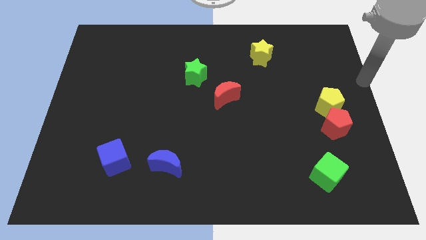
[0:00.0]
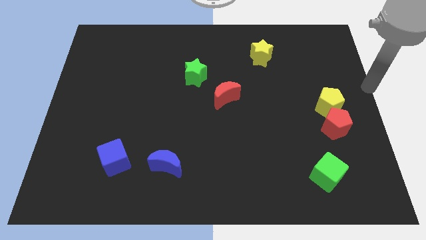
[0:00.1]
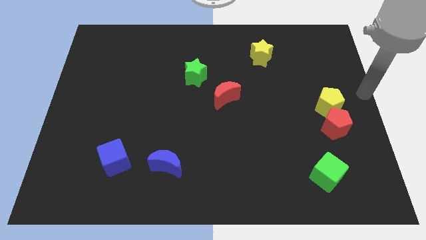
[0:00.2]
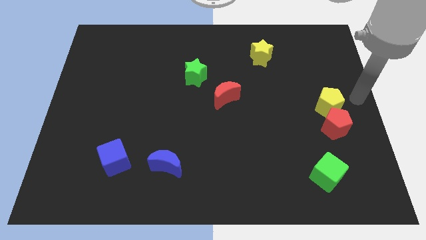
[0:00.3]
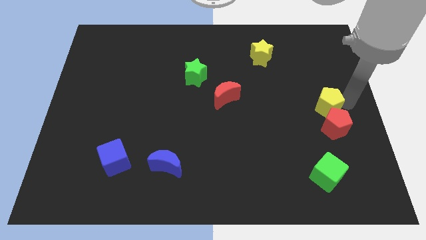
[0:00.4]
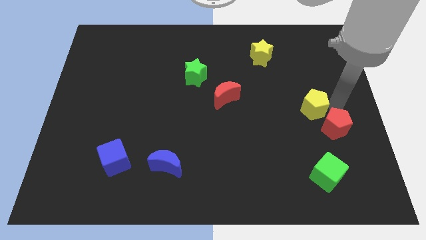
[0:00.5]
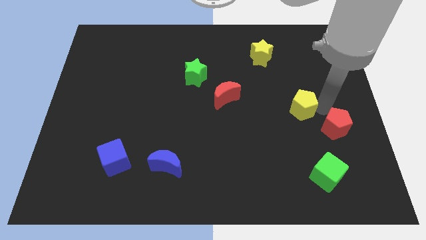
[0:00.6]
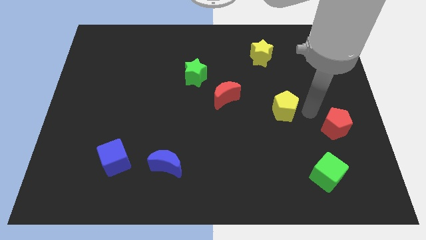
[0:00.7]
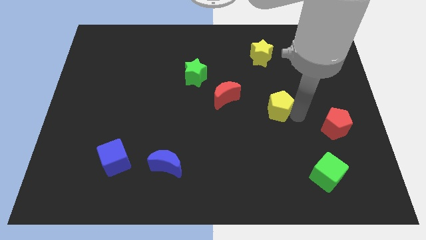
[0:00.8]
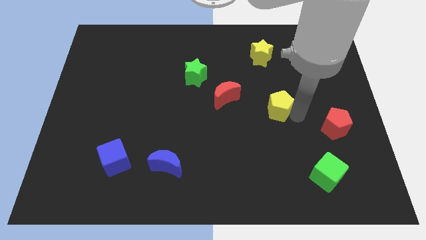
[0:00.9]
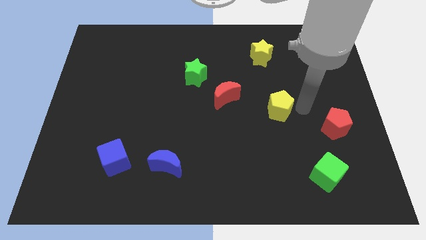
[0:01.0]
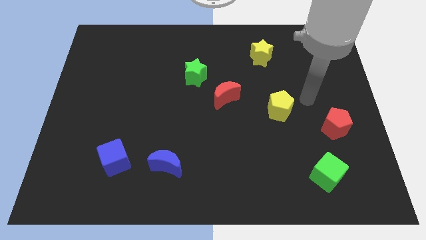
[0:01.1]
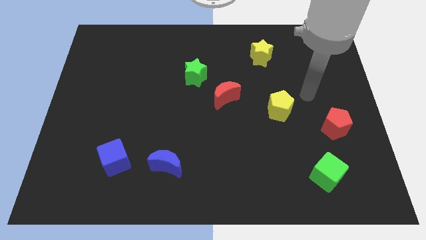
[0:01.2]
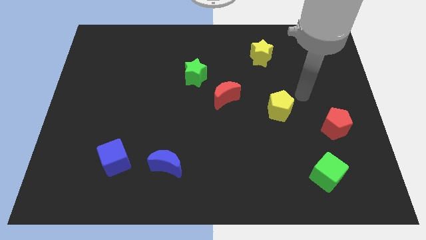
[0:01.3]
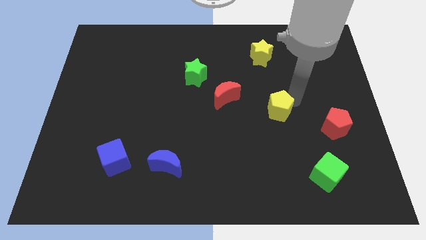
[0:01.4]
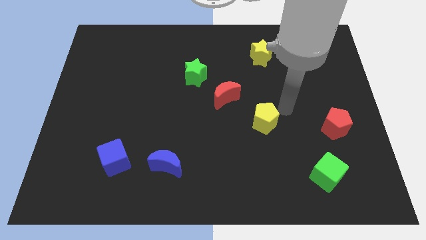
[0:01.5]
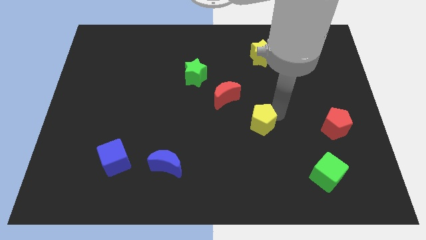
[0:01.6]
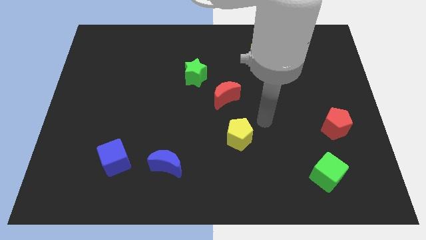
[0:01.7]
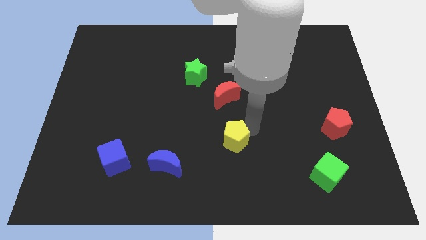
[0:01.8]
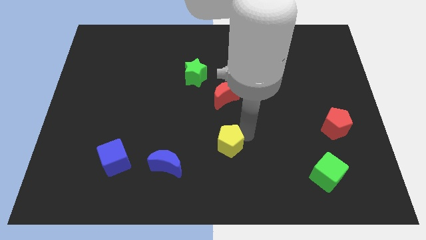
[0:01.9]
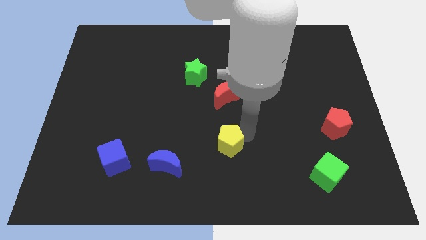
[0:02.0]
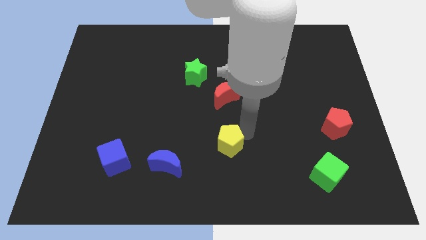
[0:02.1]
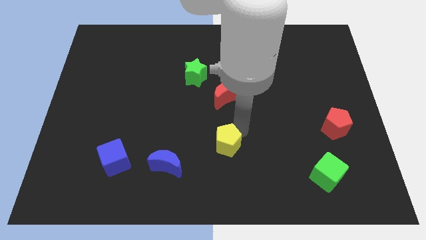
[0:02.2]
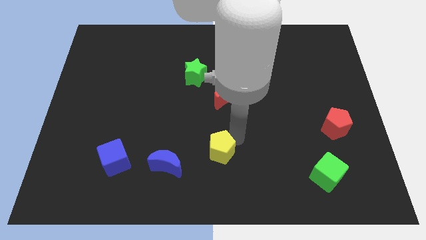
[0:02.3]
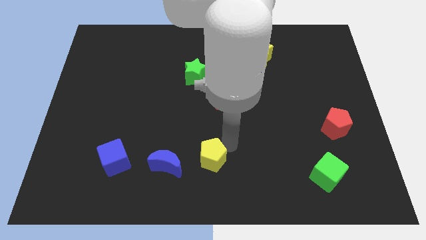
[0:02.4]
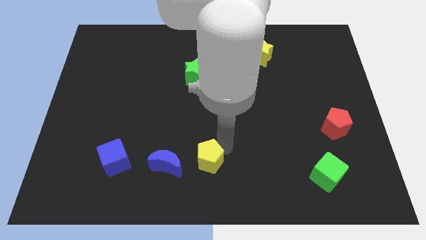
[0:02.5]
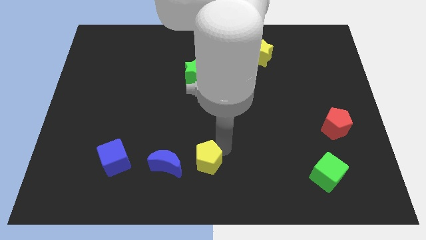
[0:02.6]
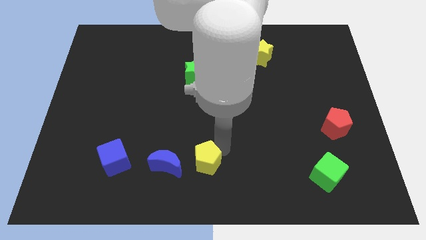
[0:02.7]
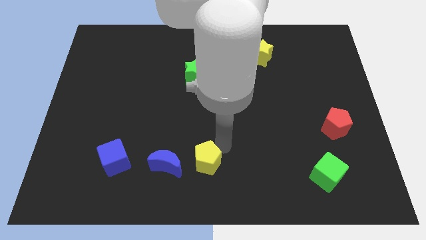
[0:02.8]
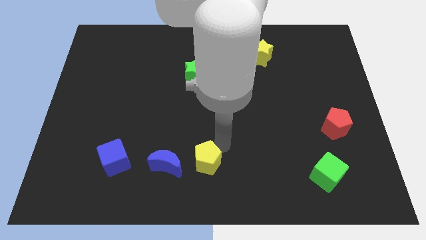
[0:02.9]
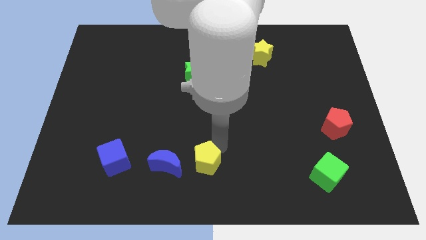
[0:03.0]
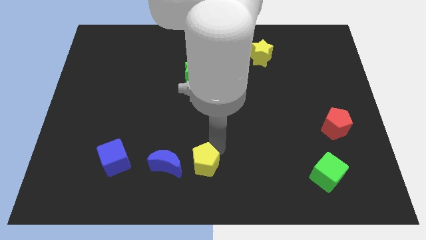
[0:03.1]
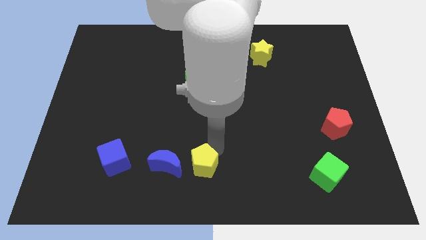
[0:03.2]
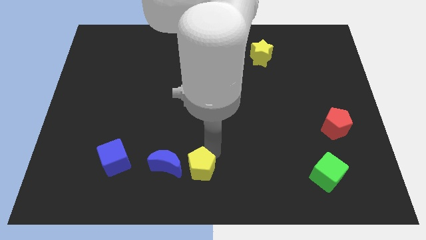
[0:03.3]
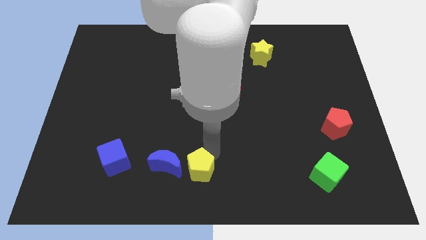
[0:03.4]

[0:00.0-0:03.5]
move the yellow pentagon to the right of blue crescent

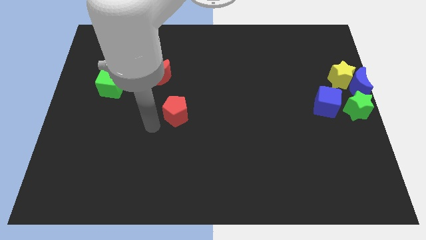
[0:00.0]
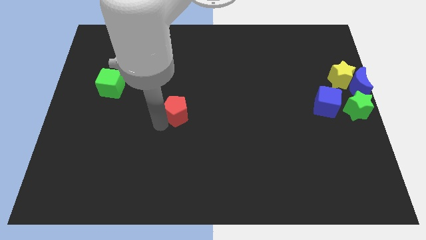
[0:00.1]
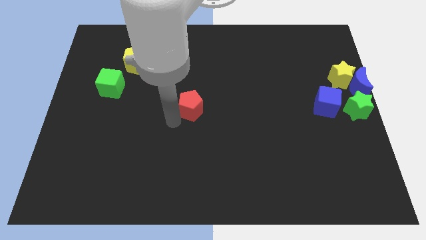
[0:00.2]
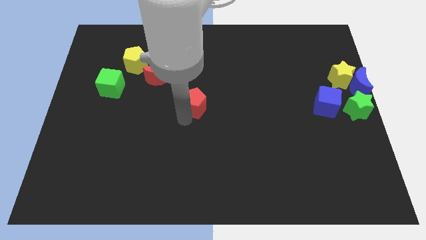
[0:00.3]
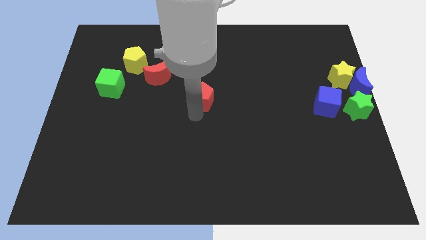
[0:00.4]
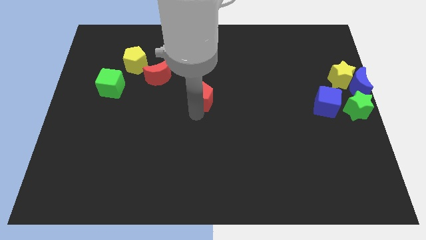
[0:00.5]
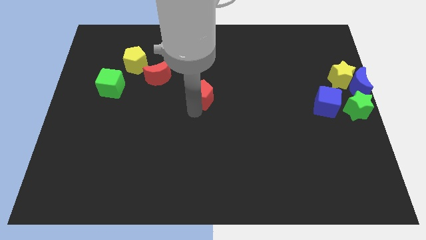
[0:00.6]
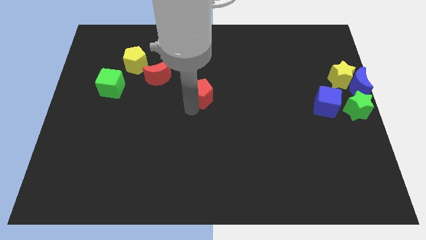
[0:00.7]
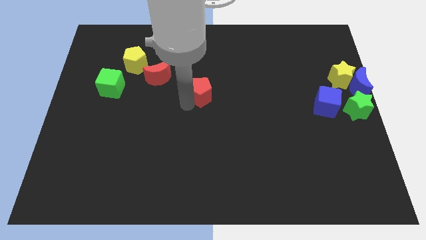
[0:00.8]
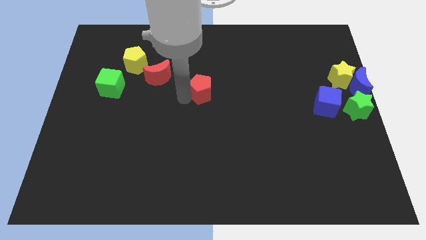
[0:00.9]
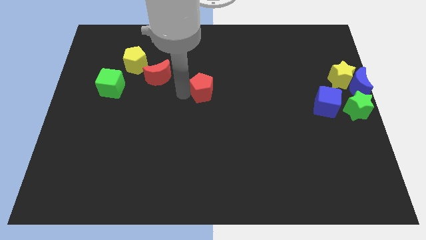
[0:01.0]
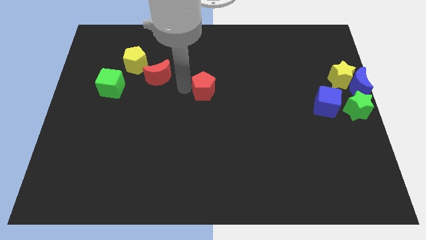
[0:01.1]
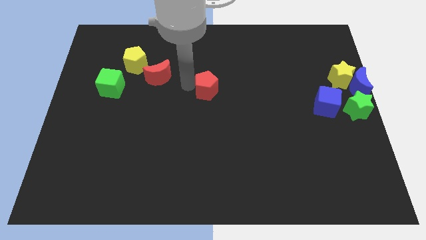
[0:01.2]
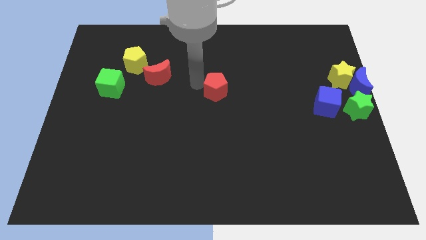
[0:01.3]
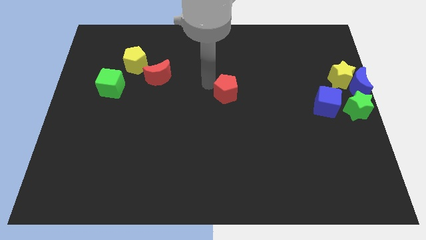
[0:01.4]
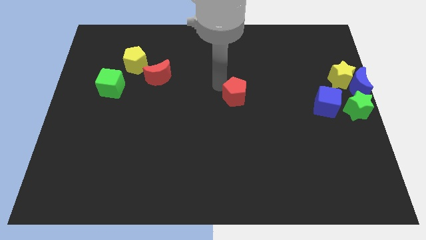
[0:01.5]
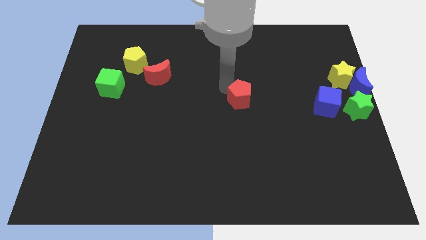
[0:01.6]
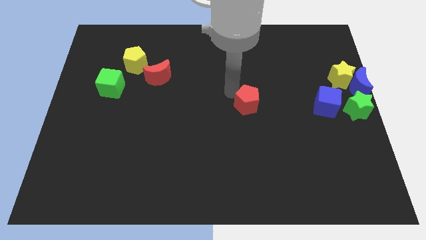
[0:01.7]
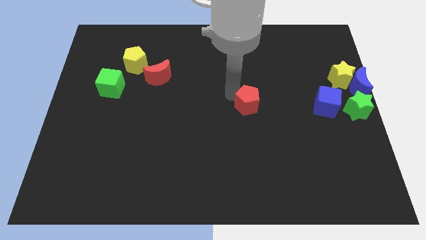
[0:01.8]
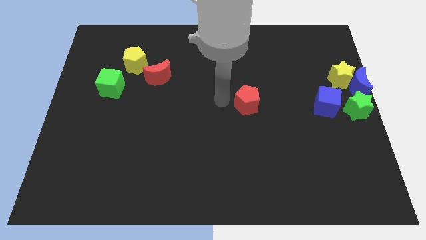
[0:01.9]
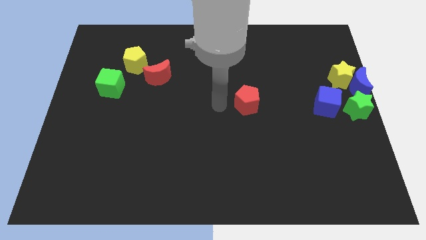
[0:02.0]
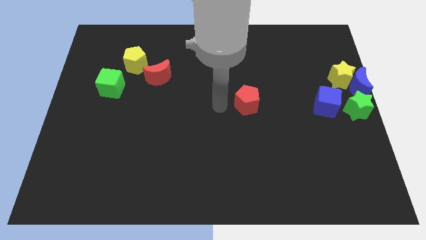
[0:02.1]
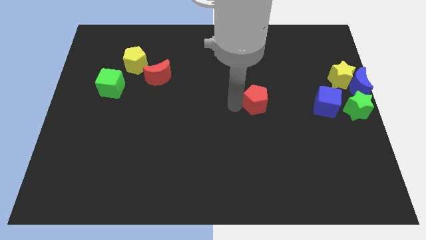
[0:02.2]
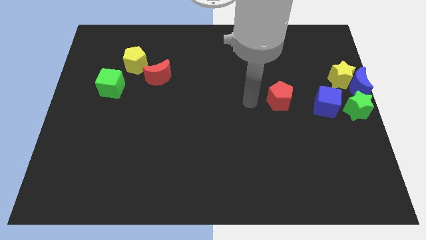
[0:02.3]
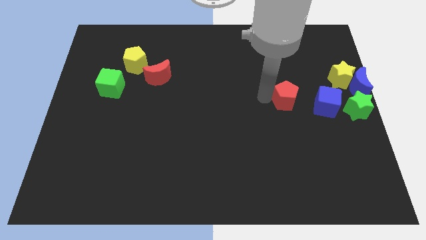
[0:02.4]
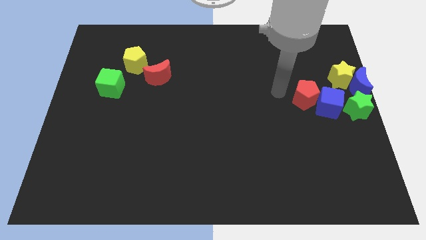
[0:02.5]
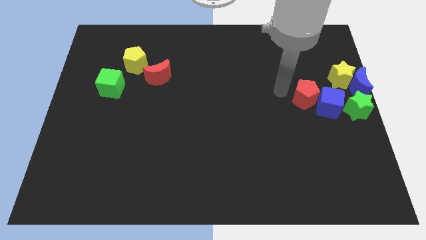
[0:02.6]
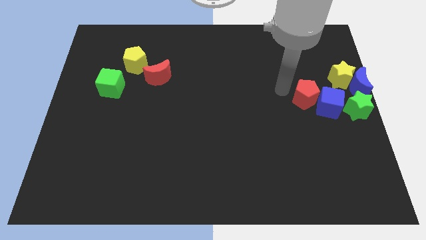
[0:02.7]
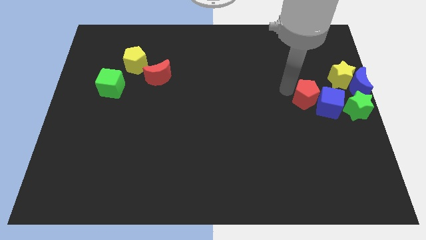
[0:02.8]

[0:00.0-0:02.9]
push the red pentagon into the blue cube

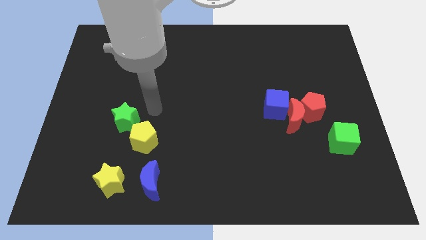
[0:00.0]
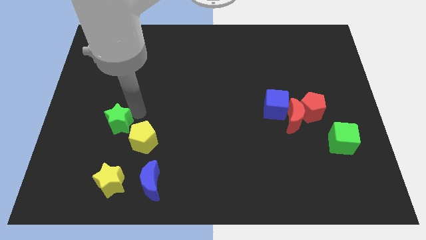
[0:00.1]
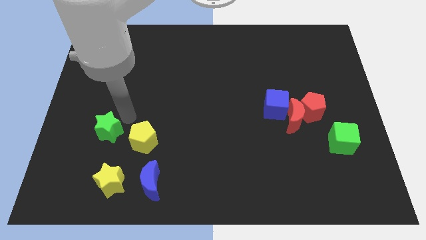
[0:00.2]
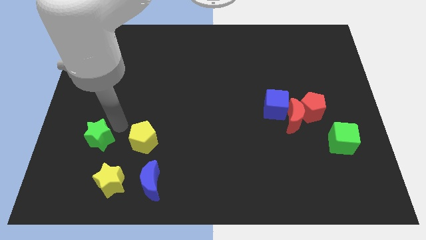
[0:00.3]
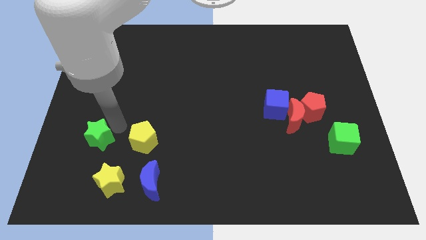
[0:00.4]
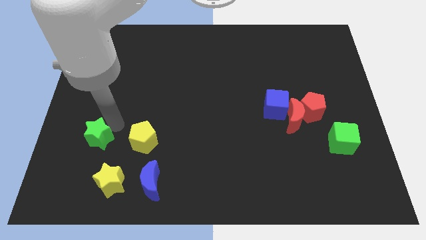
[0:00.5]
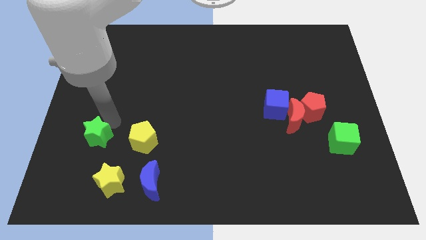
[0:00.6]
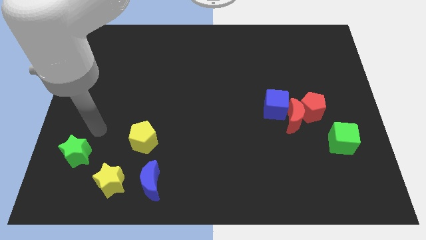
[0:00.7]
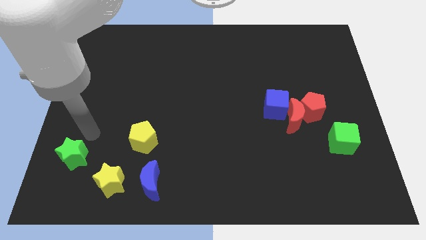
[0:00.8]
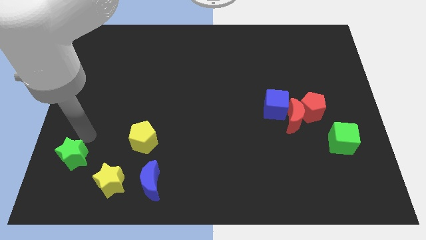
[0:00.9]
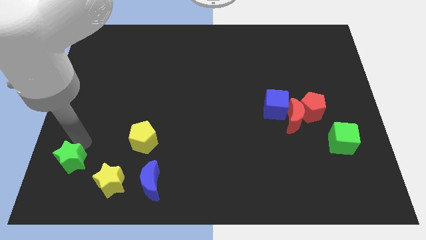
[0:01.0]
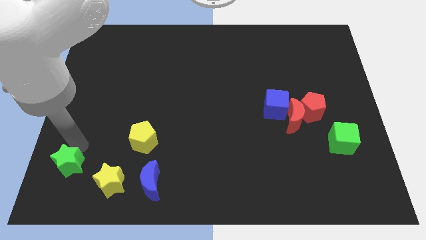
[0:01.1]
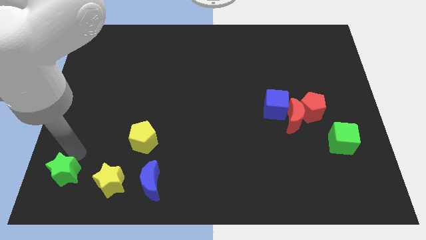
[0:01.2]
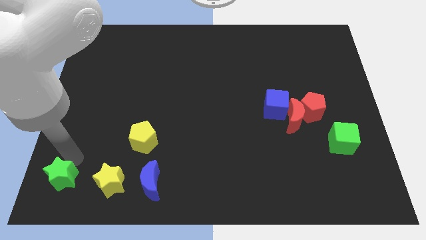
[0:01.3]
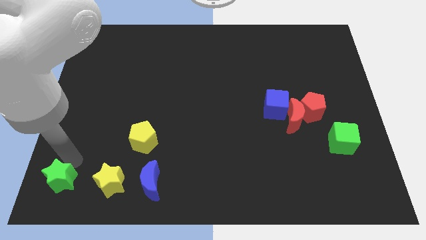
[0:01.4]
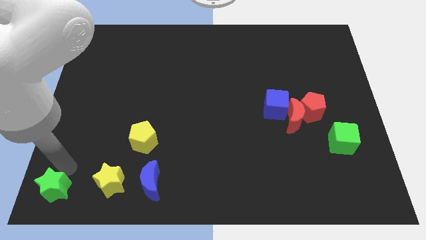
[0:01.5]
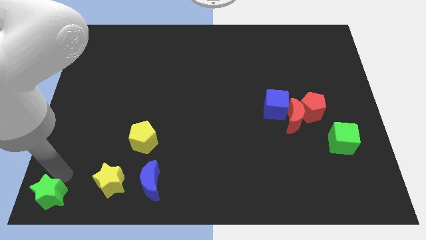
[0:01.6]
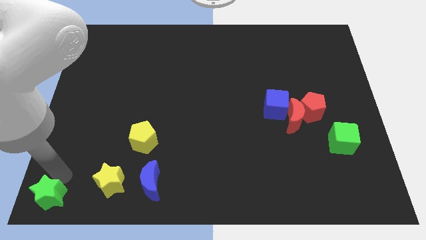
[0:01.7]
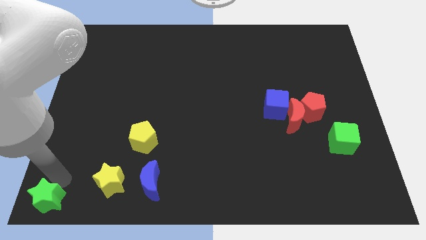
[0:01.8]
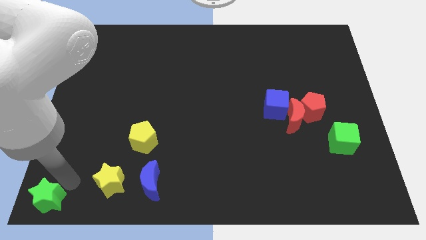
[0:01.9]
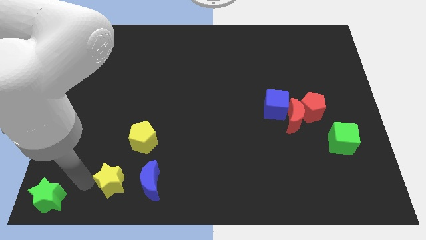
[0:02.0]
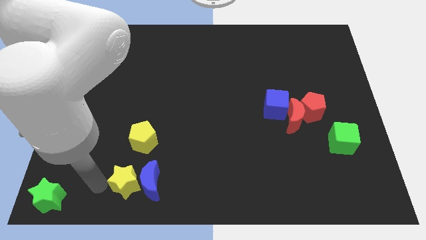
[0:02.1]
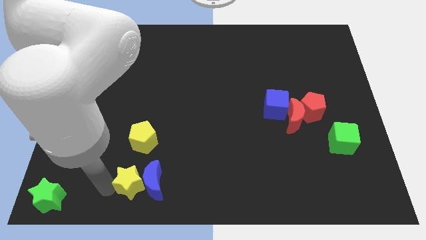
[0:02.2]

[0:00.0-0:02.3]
move the green star to the bottom left corner

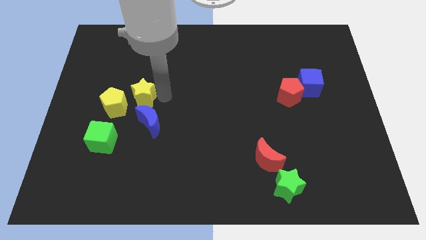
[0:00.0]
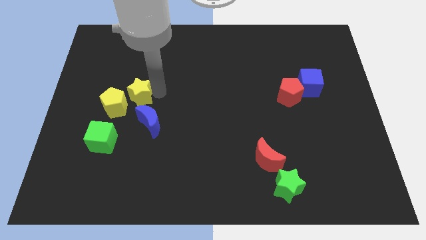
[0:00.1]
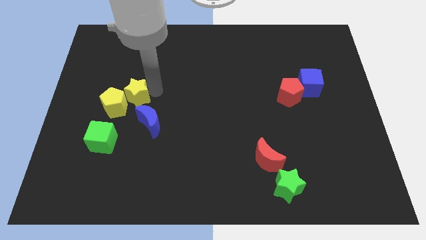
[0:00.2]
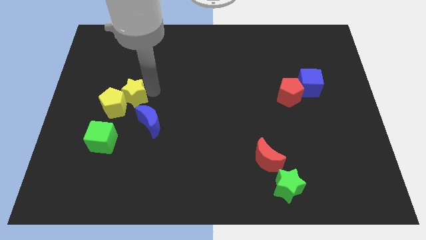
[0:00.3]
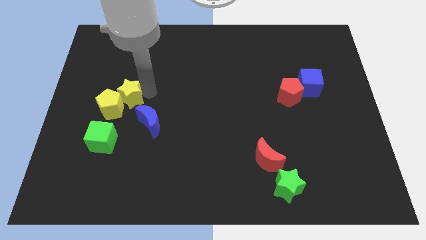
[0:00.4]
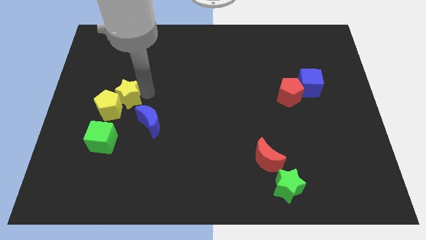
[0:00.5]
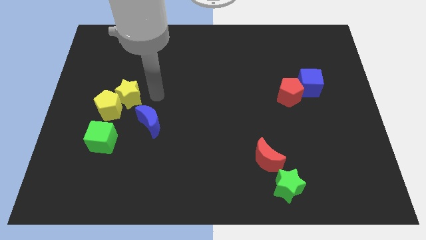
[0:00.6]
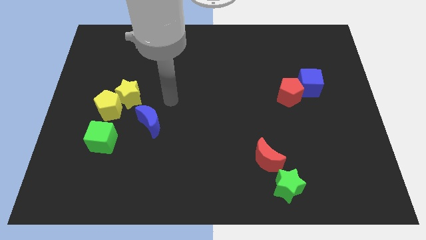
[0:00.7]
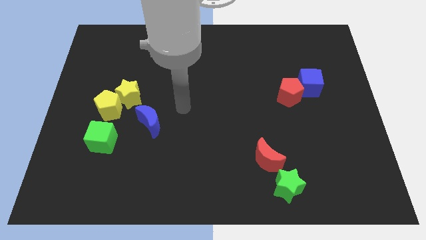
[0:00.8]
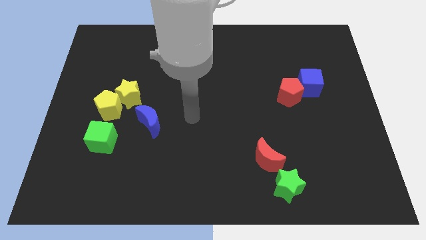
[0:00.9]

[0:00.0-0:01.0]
push the yellow star into the yellow pentagon
